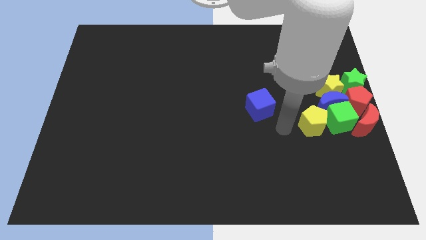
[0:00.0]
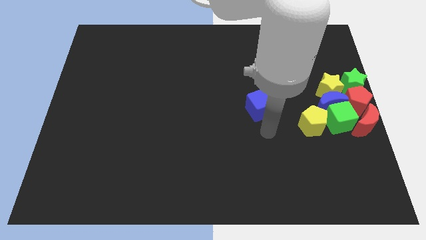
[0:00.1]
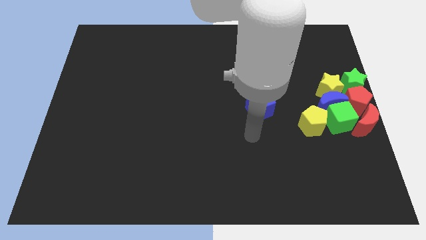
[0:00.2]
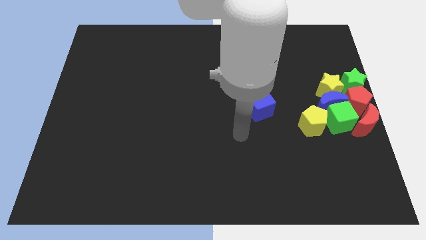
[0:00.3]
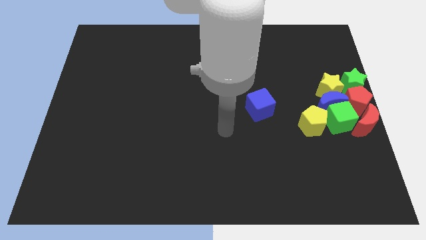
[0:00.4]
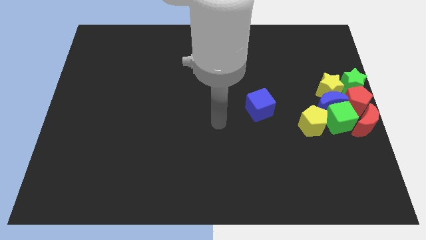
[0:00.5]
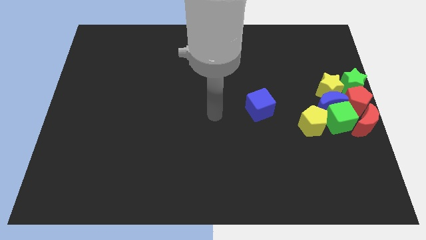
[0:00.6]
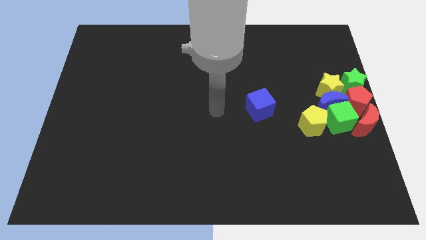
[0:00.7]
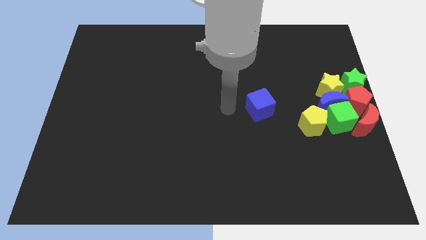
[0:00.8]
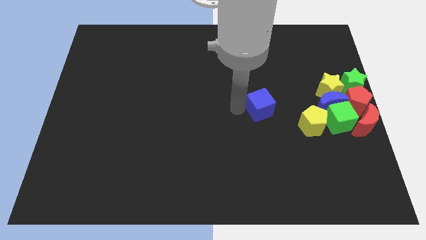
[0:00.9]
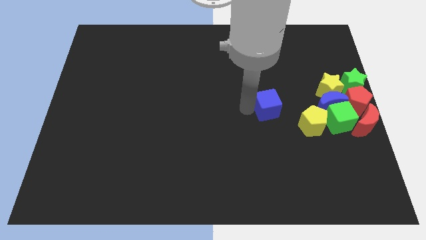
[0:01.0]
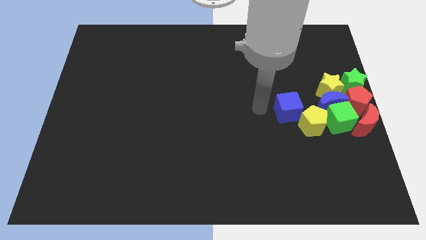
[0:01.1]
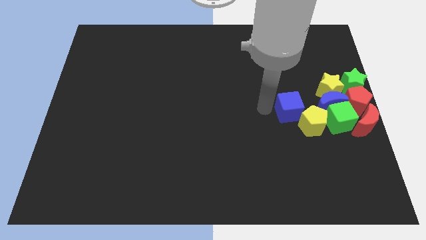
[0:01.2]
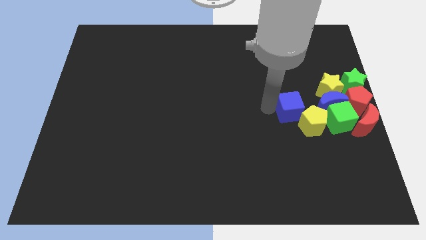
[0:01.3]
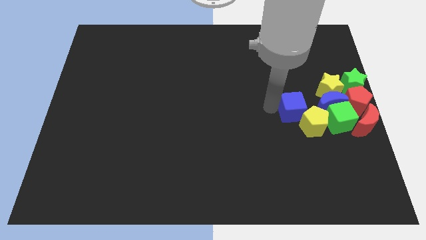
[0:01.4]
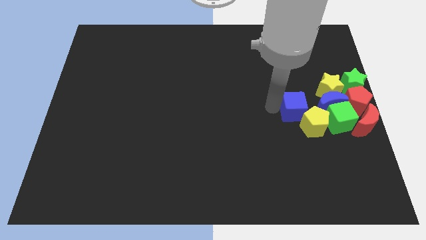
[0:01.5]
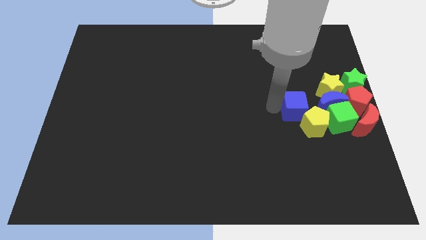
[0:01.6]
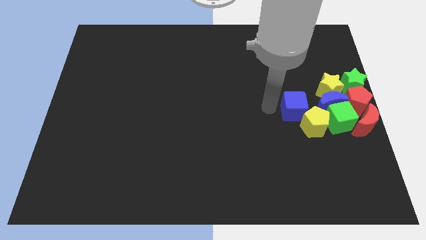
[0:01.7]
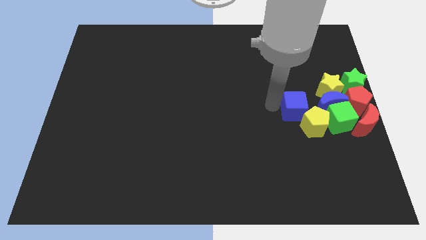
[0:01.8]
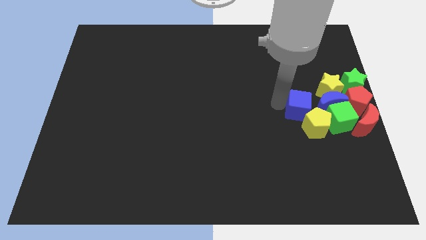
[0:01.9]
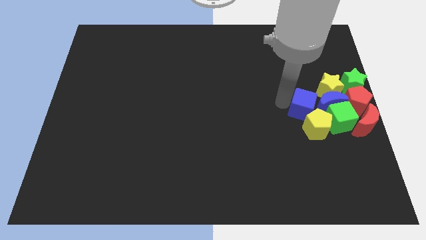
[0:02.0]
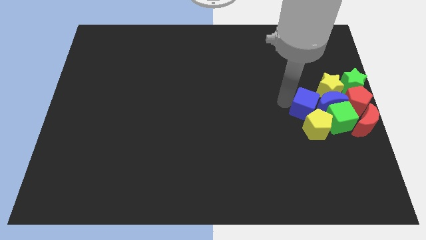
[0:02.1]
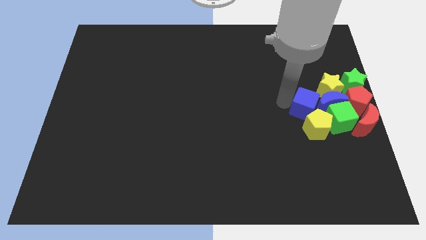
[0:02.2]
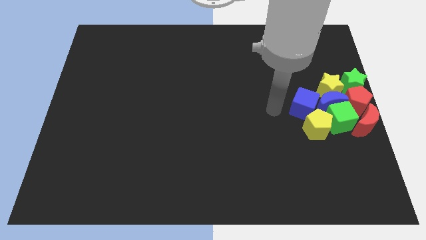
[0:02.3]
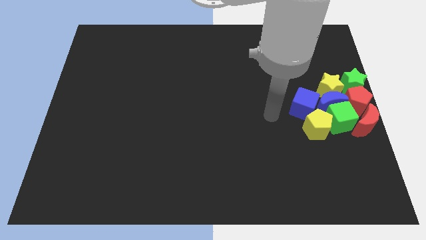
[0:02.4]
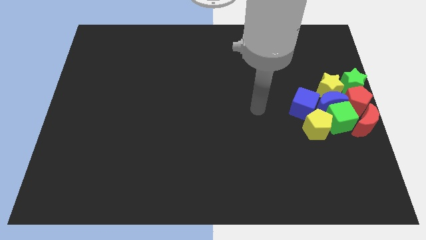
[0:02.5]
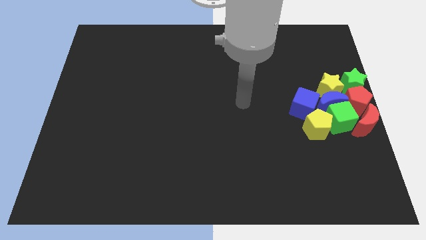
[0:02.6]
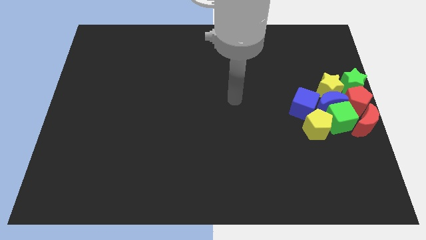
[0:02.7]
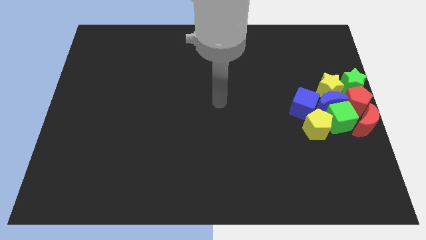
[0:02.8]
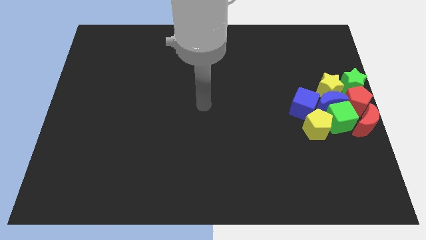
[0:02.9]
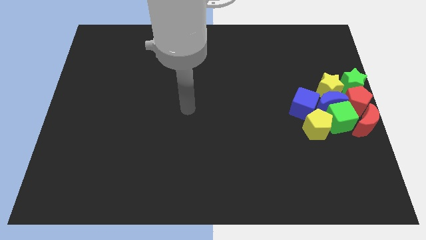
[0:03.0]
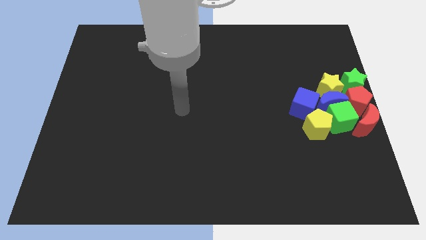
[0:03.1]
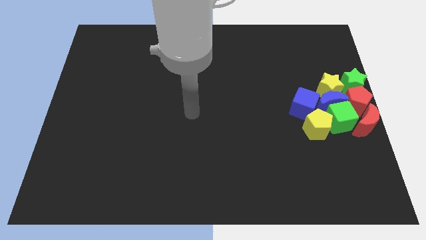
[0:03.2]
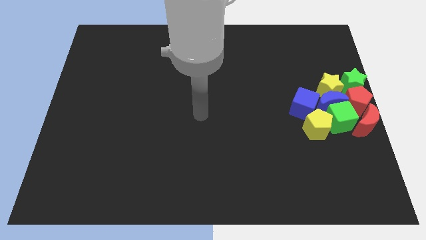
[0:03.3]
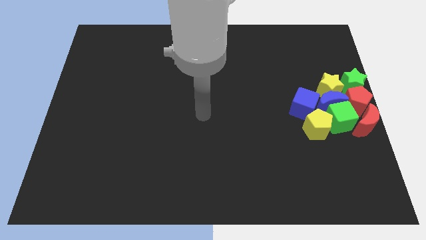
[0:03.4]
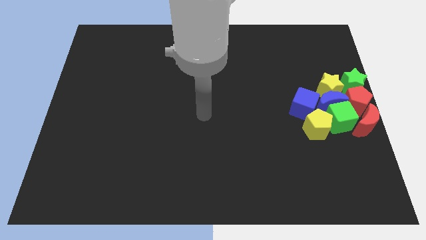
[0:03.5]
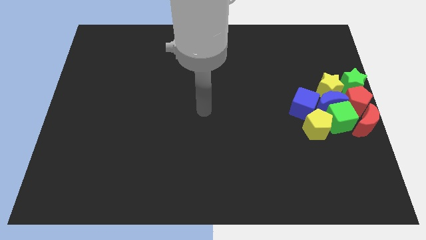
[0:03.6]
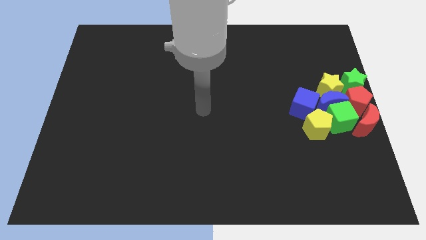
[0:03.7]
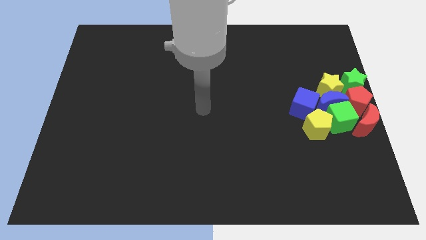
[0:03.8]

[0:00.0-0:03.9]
push the blue cube close to the blue crescent

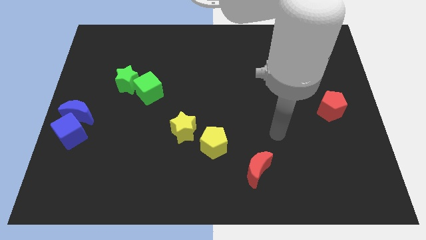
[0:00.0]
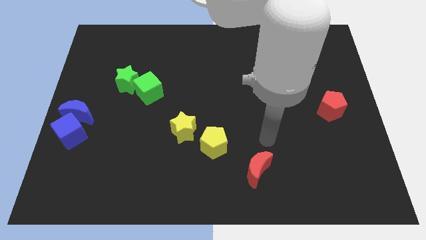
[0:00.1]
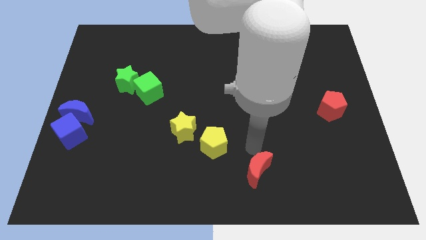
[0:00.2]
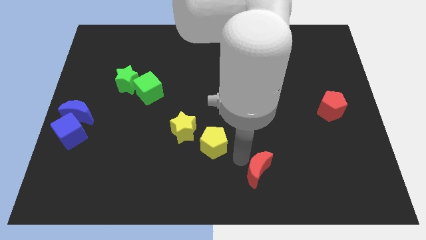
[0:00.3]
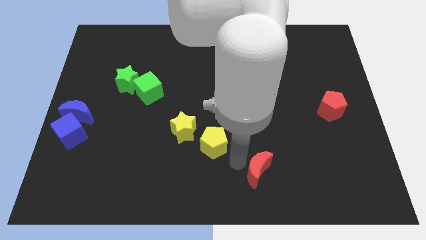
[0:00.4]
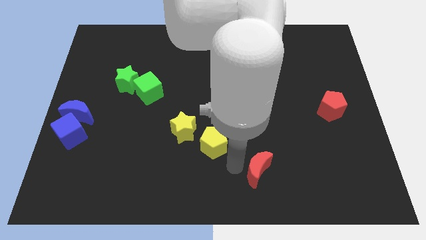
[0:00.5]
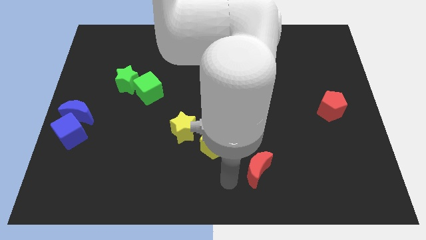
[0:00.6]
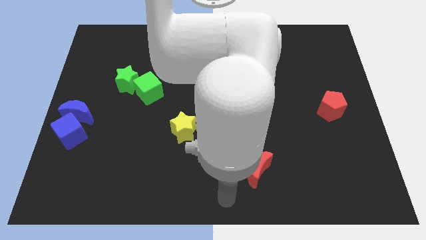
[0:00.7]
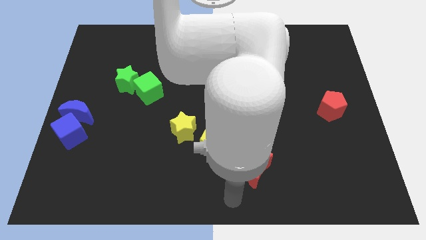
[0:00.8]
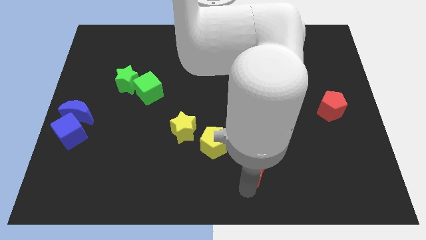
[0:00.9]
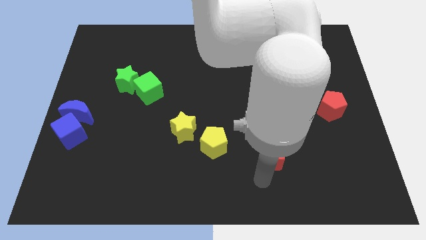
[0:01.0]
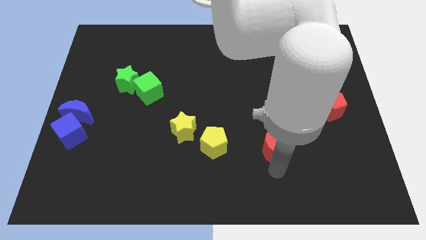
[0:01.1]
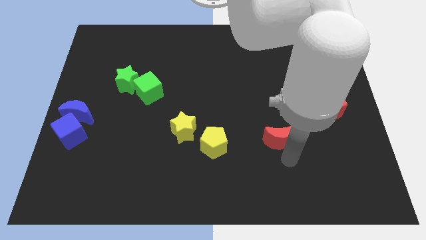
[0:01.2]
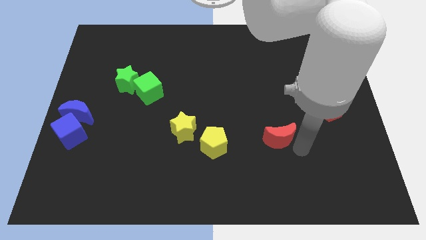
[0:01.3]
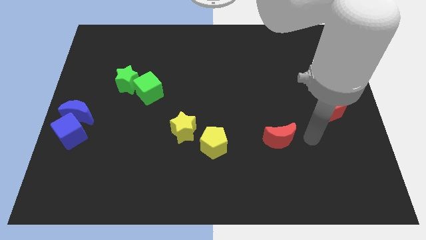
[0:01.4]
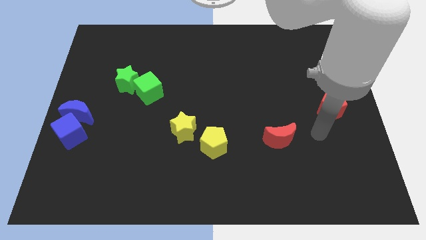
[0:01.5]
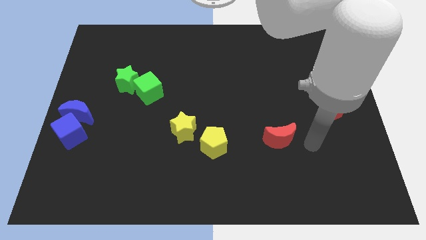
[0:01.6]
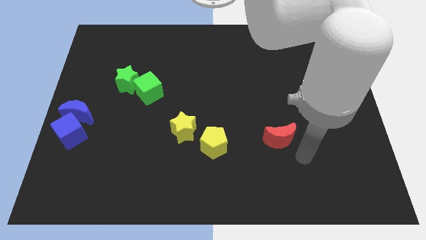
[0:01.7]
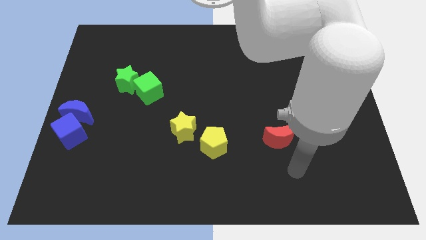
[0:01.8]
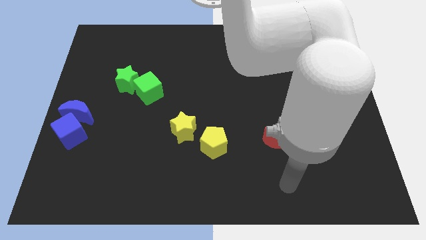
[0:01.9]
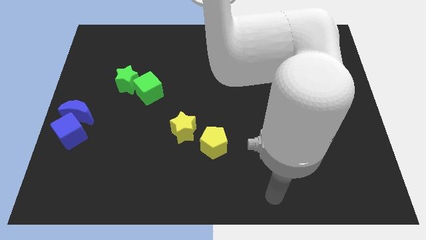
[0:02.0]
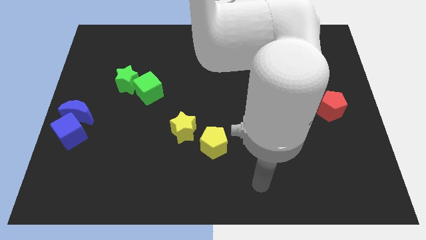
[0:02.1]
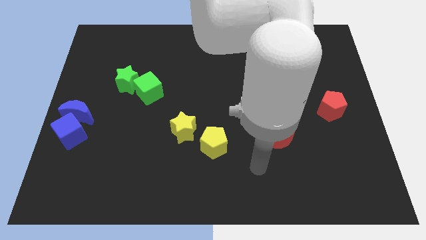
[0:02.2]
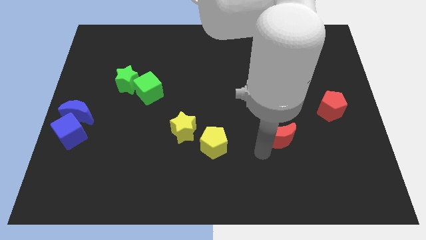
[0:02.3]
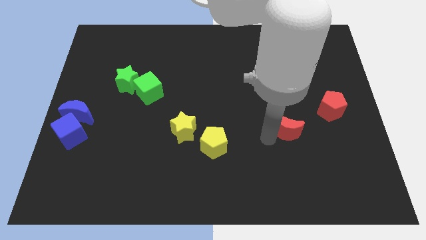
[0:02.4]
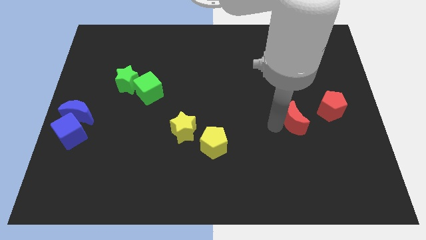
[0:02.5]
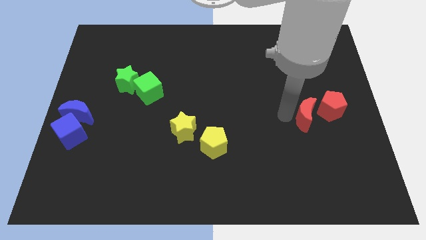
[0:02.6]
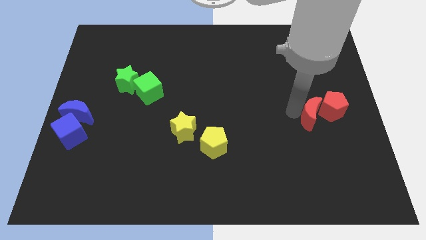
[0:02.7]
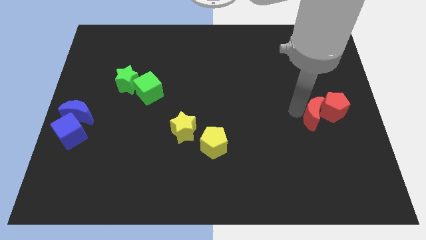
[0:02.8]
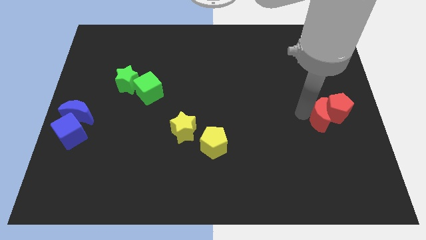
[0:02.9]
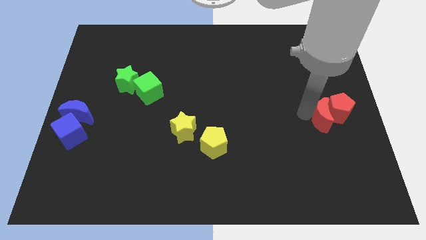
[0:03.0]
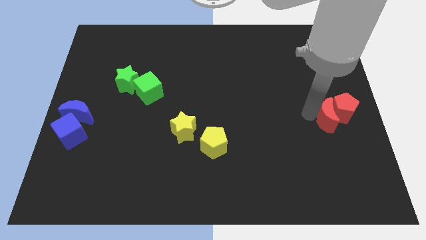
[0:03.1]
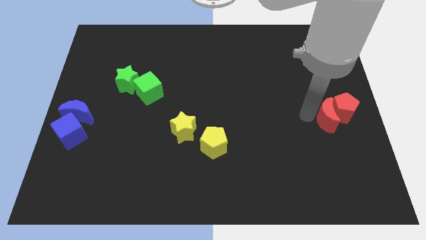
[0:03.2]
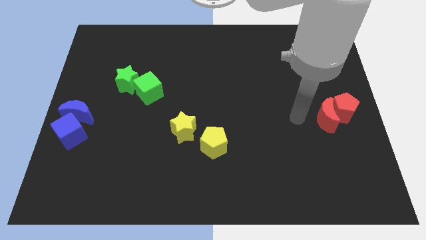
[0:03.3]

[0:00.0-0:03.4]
push the red crescent into the red pentagon

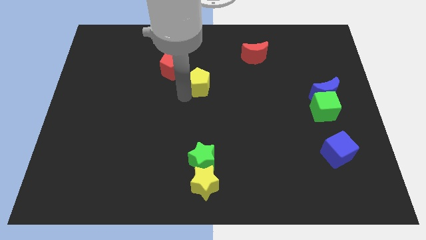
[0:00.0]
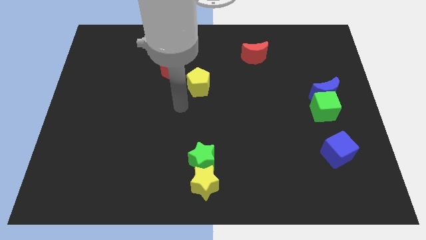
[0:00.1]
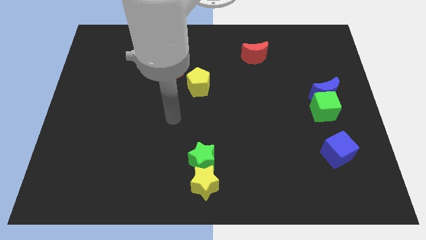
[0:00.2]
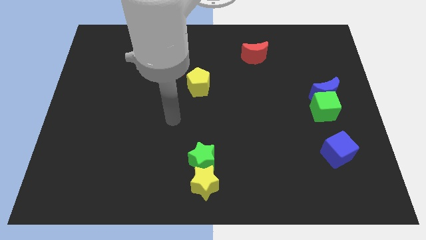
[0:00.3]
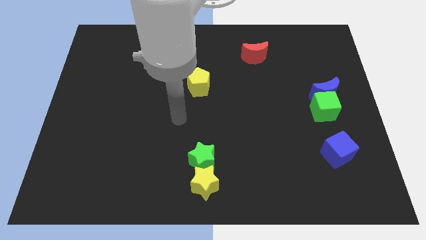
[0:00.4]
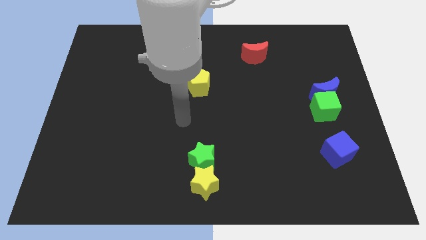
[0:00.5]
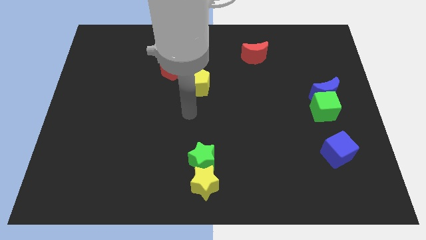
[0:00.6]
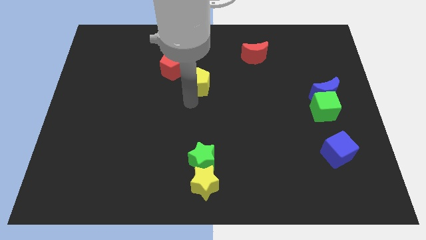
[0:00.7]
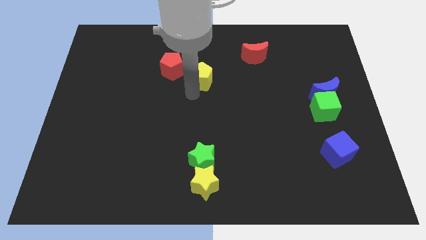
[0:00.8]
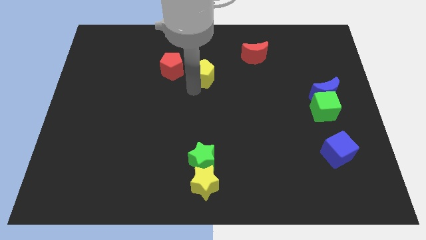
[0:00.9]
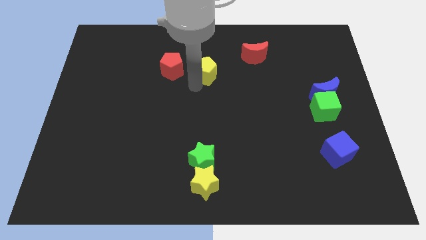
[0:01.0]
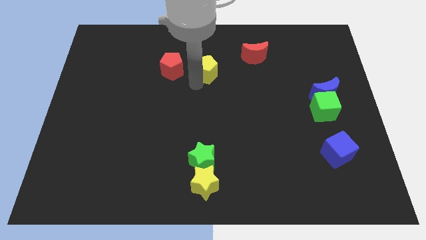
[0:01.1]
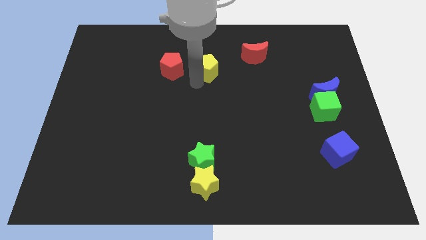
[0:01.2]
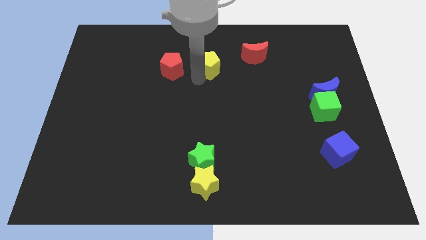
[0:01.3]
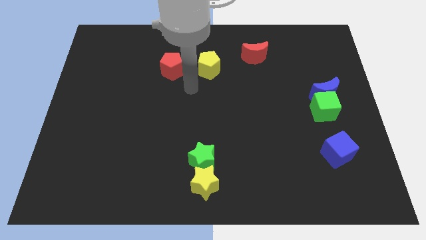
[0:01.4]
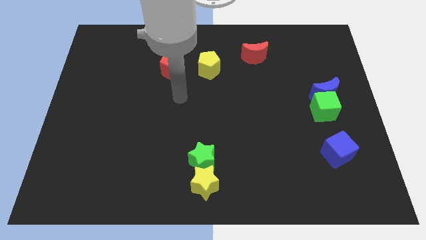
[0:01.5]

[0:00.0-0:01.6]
place the yellow pentagon to the right side of the red pentagon
